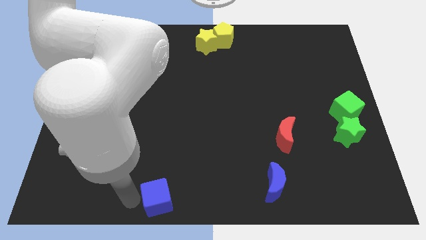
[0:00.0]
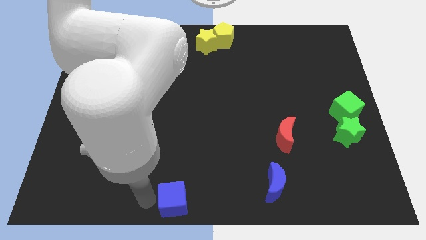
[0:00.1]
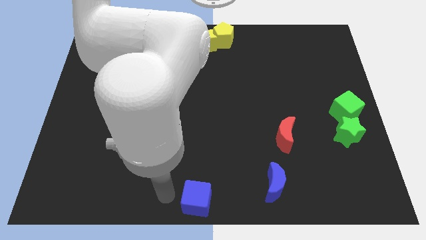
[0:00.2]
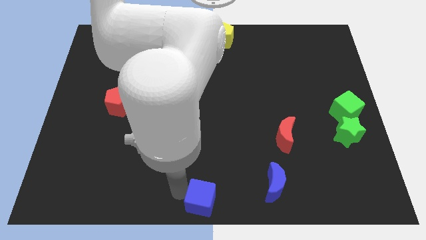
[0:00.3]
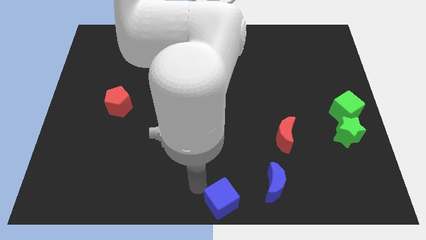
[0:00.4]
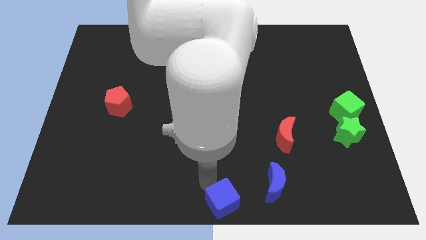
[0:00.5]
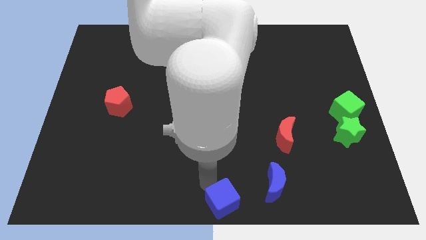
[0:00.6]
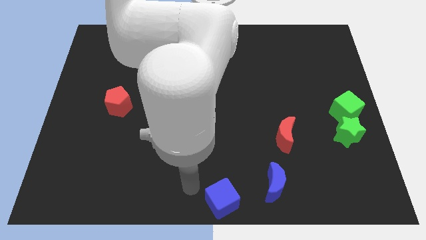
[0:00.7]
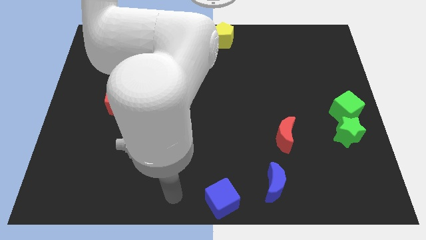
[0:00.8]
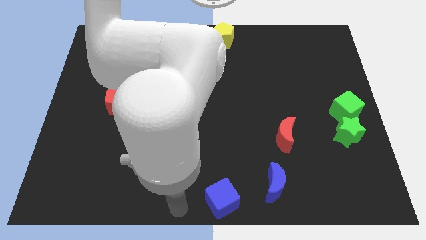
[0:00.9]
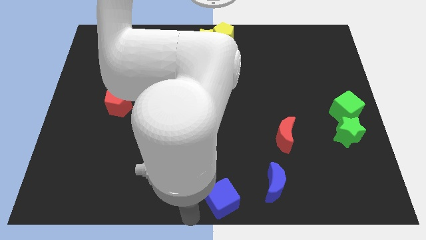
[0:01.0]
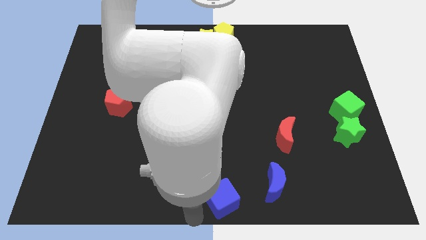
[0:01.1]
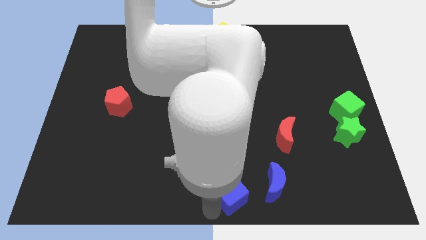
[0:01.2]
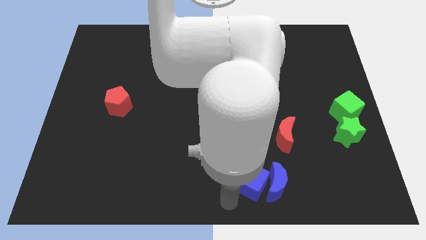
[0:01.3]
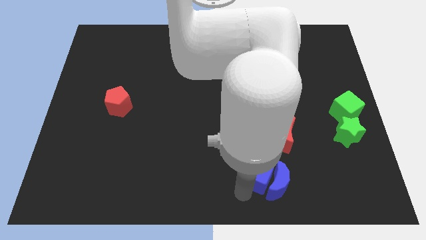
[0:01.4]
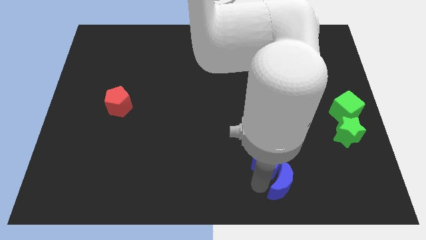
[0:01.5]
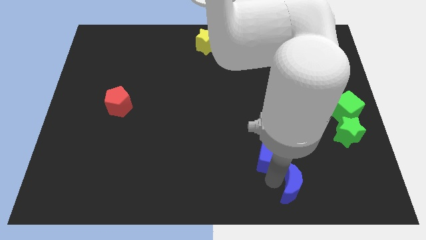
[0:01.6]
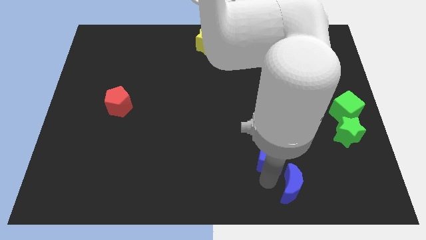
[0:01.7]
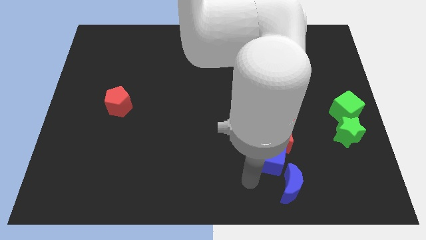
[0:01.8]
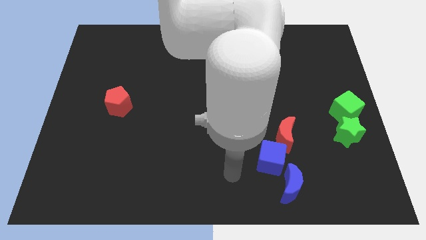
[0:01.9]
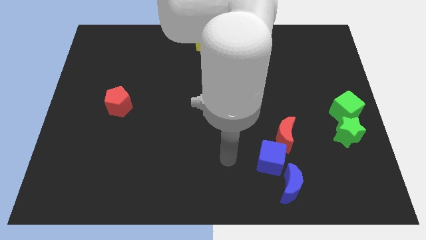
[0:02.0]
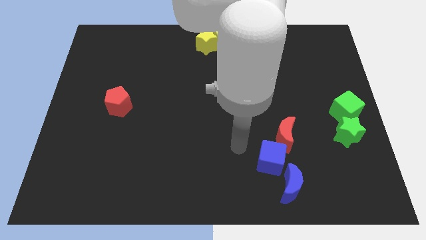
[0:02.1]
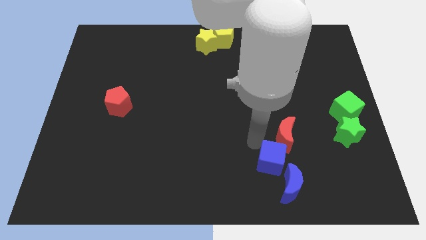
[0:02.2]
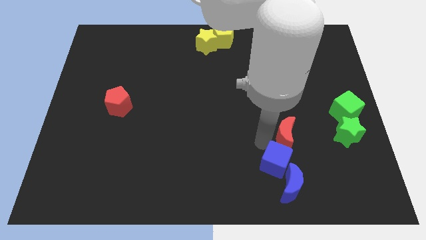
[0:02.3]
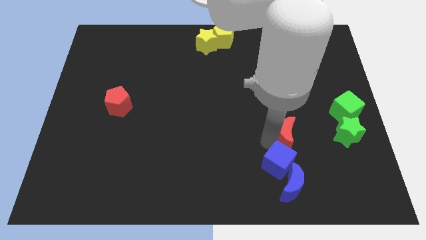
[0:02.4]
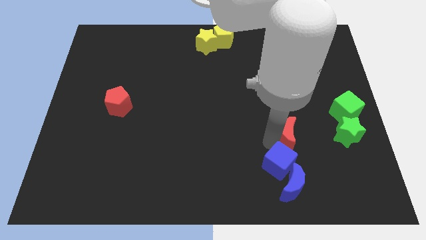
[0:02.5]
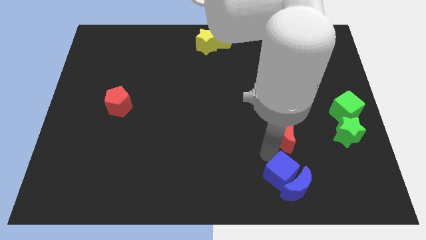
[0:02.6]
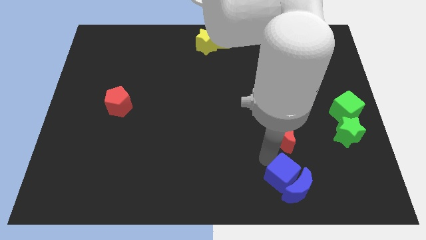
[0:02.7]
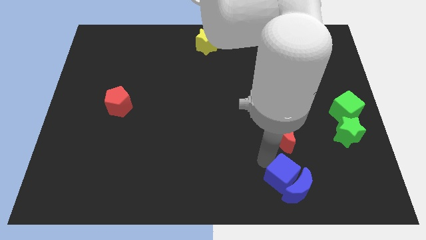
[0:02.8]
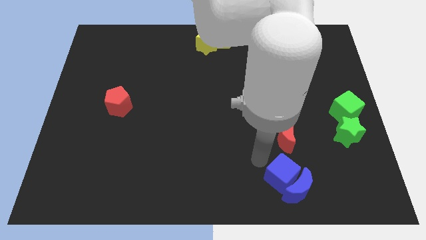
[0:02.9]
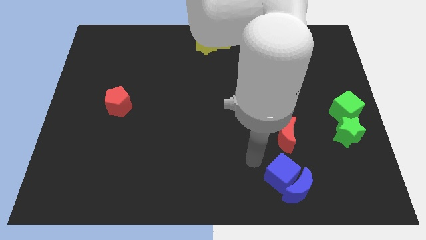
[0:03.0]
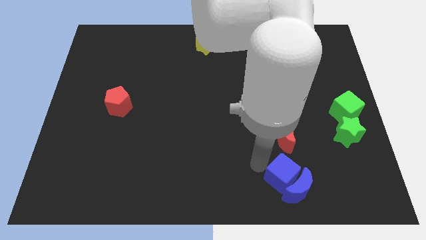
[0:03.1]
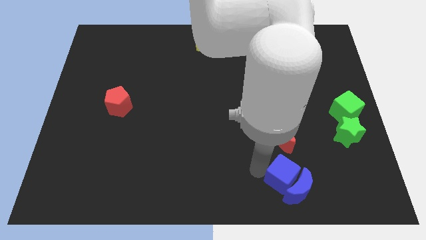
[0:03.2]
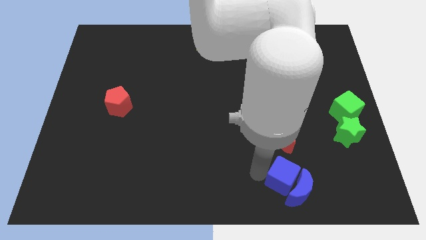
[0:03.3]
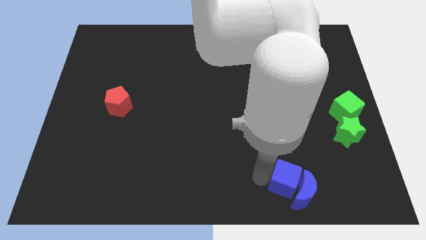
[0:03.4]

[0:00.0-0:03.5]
push blue cube into blue moon

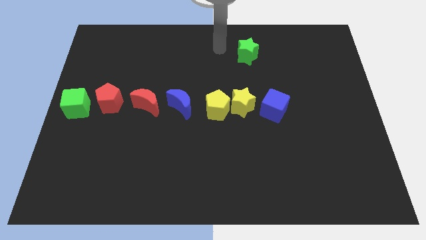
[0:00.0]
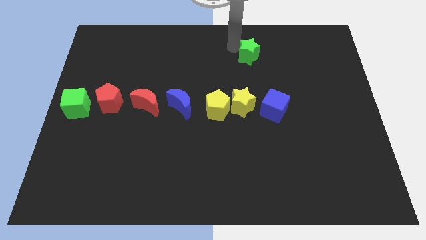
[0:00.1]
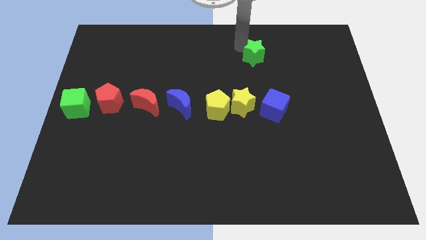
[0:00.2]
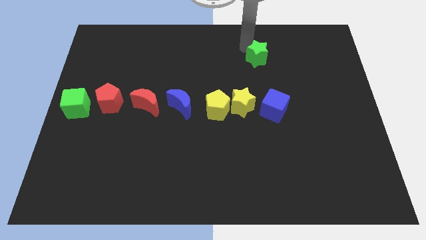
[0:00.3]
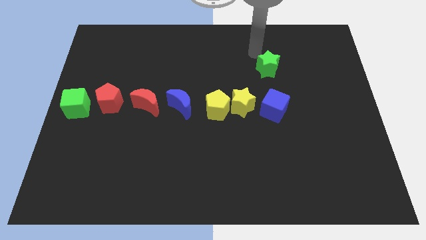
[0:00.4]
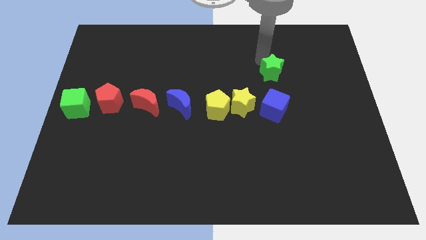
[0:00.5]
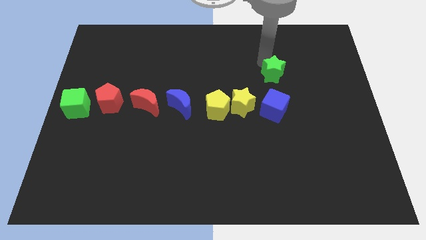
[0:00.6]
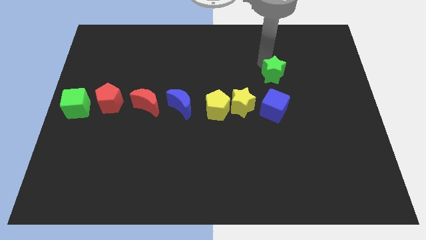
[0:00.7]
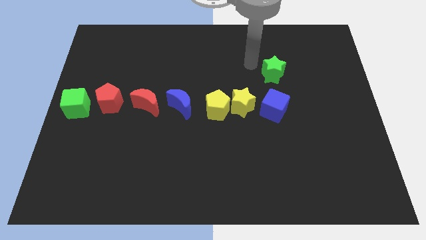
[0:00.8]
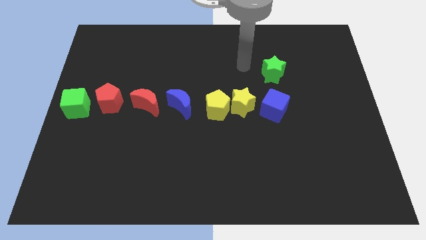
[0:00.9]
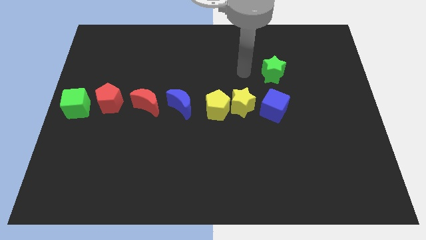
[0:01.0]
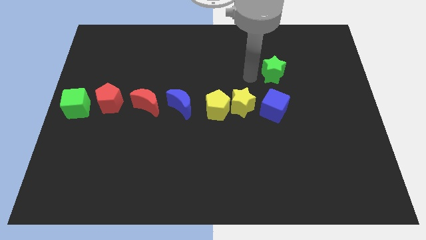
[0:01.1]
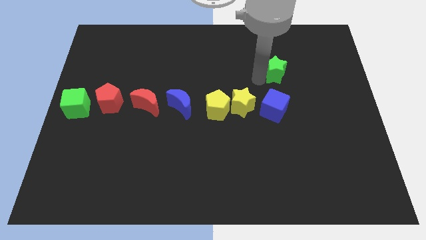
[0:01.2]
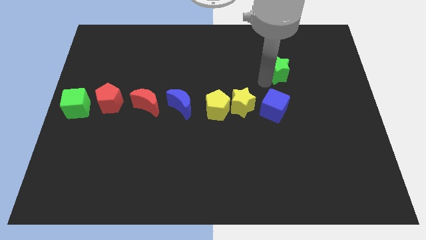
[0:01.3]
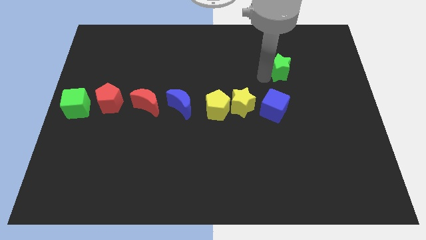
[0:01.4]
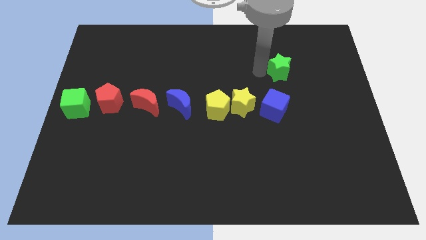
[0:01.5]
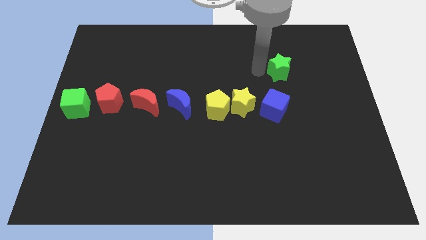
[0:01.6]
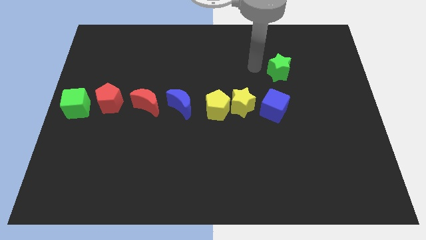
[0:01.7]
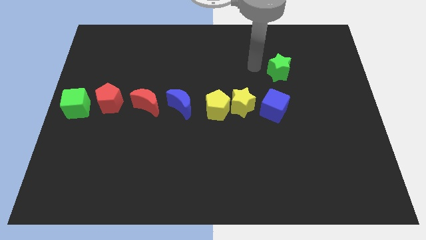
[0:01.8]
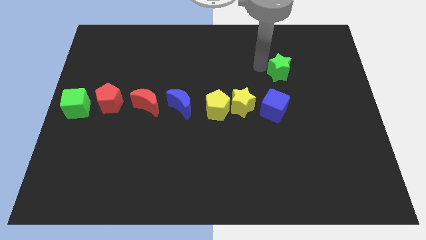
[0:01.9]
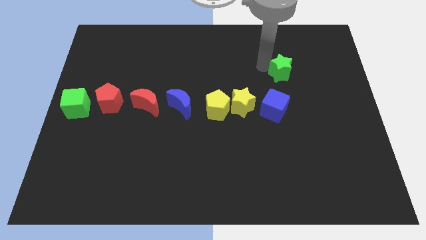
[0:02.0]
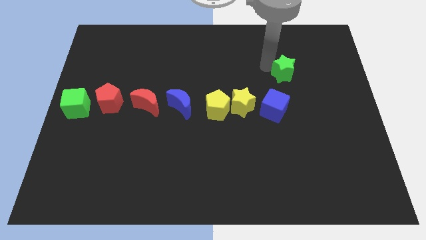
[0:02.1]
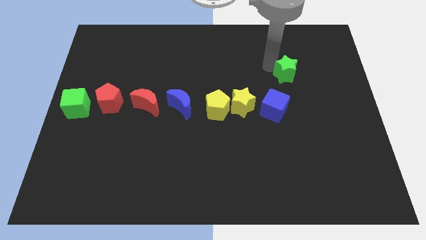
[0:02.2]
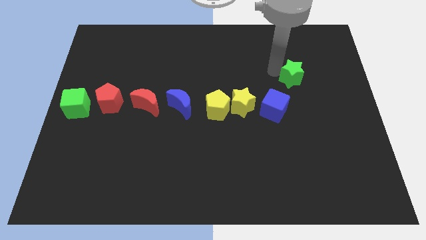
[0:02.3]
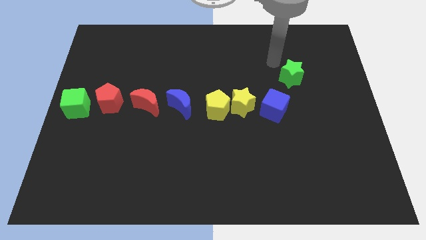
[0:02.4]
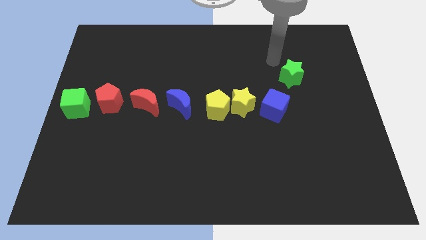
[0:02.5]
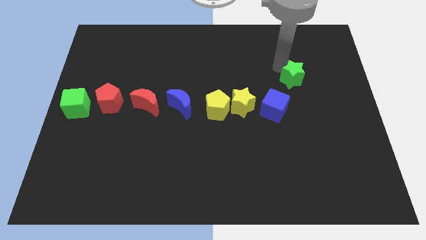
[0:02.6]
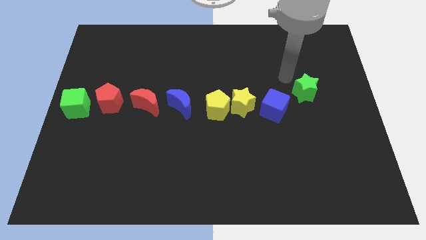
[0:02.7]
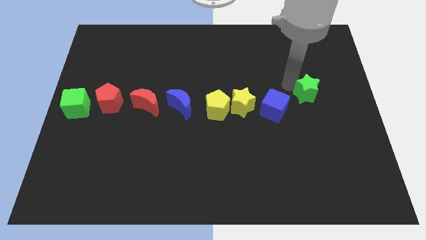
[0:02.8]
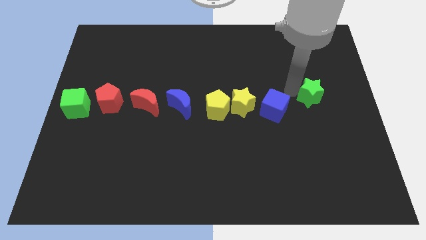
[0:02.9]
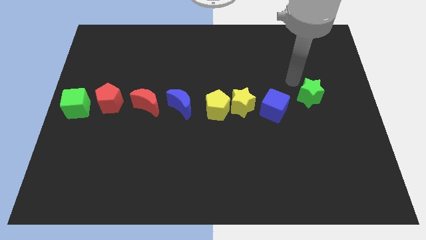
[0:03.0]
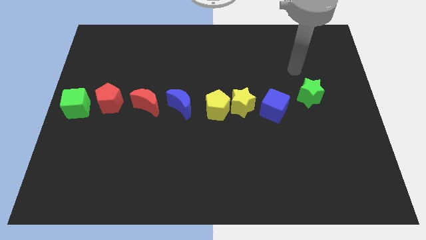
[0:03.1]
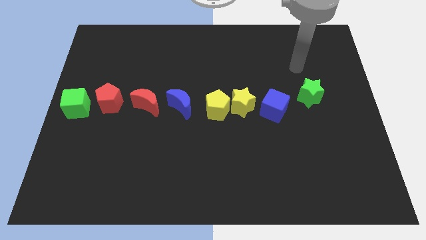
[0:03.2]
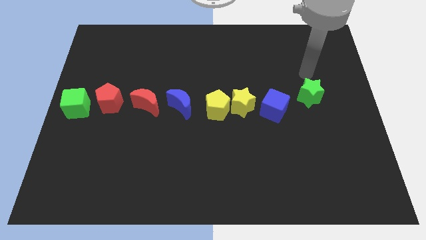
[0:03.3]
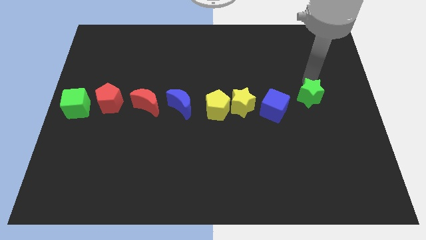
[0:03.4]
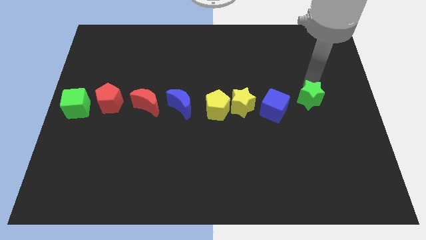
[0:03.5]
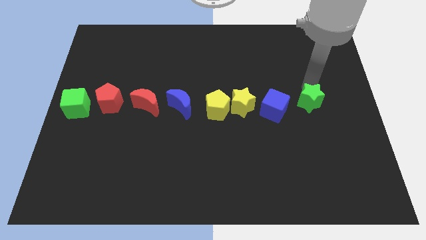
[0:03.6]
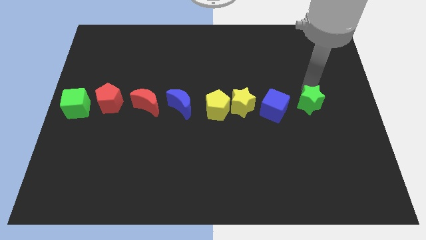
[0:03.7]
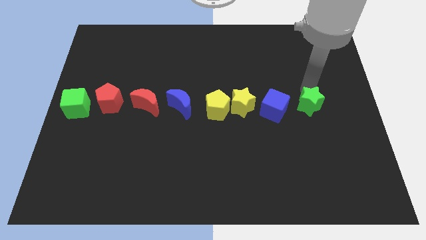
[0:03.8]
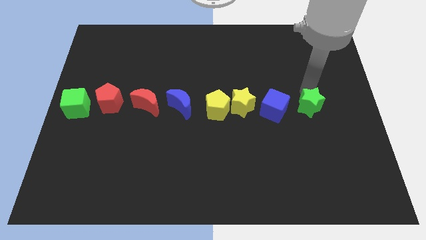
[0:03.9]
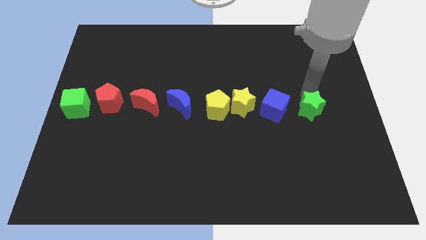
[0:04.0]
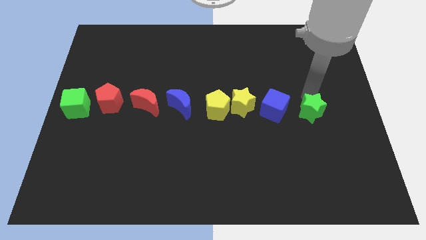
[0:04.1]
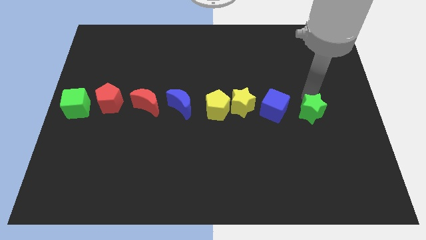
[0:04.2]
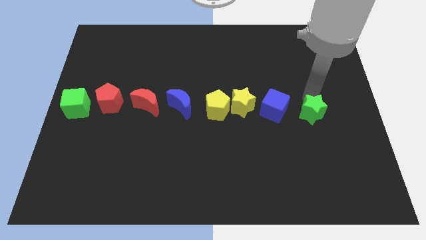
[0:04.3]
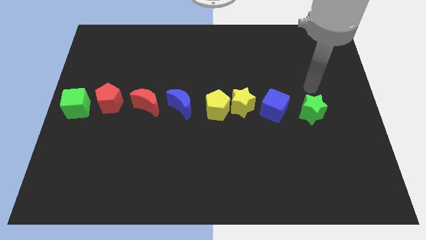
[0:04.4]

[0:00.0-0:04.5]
move the green star towards the right to blue cube

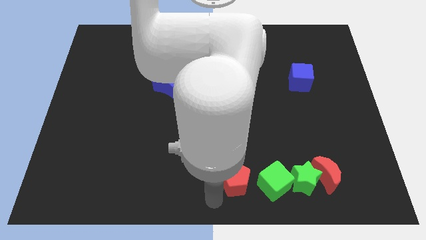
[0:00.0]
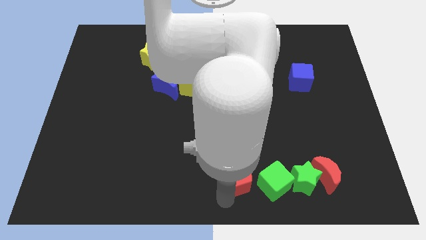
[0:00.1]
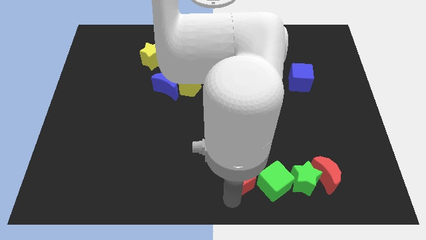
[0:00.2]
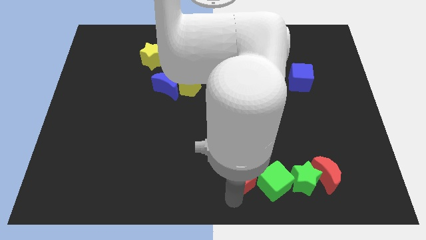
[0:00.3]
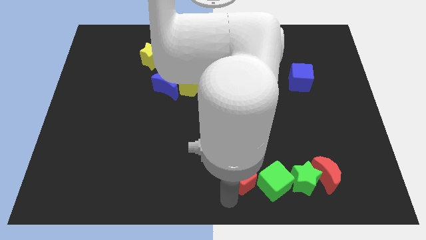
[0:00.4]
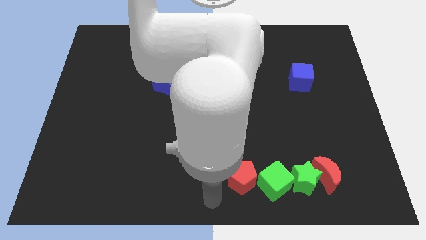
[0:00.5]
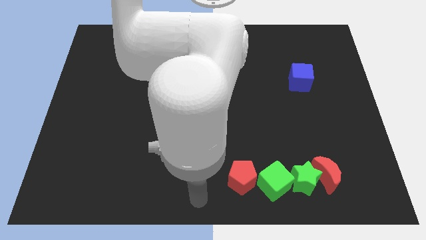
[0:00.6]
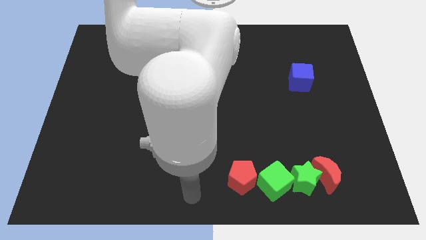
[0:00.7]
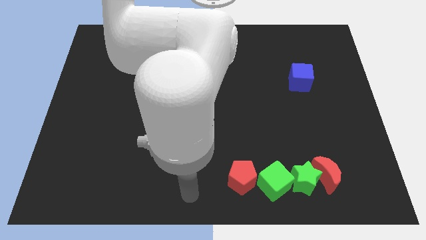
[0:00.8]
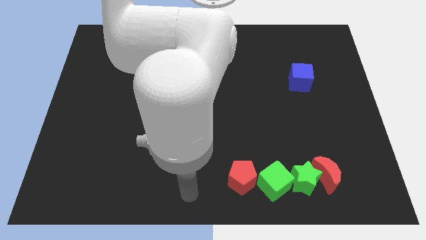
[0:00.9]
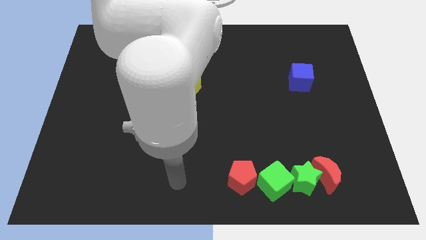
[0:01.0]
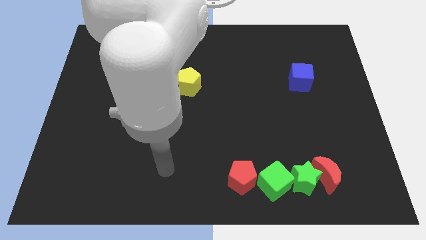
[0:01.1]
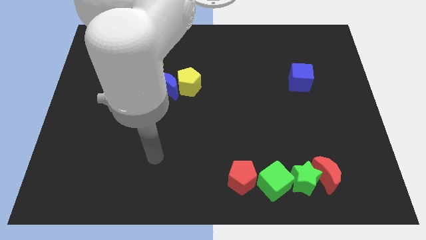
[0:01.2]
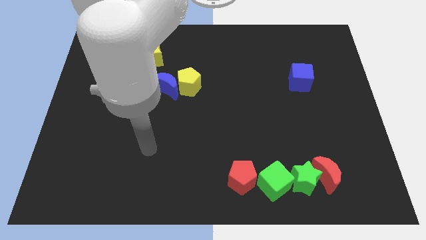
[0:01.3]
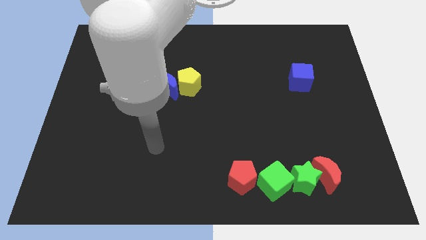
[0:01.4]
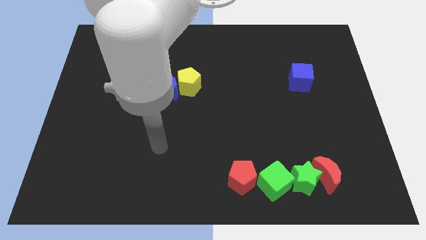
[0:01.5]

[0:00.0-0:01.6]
arrange the red pentagon green cube green star and red moon in a horizontal line
